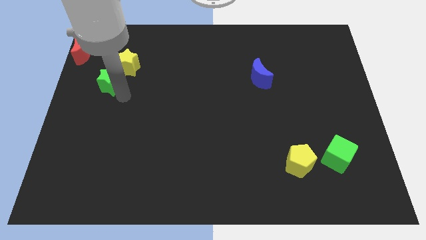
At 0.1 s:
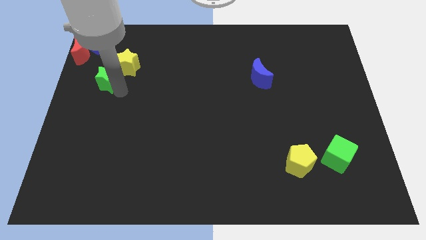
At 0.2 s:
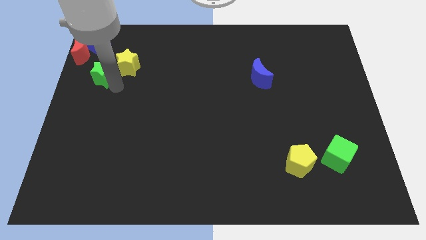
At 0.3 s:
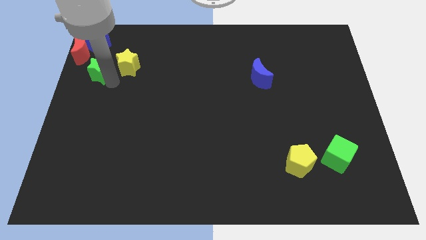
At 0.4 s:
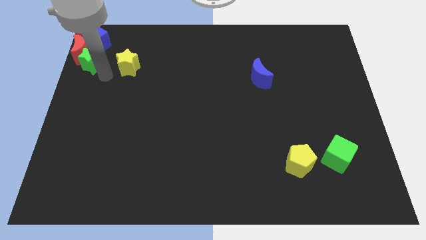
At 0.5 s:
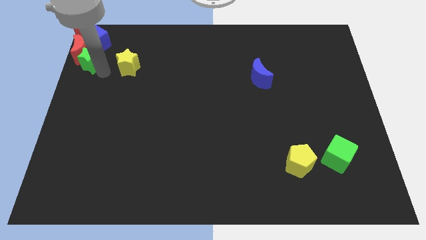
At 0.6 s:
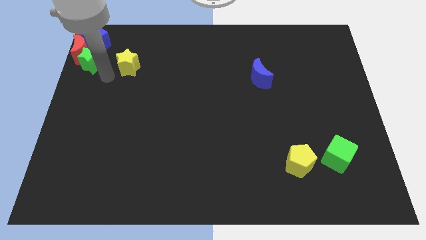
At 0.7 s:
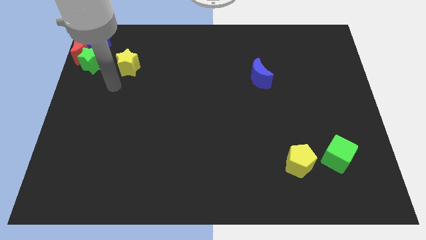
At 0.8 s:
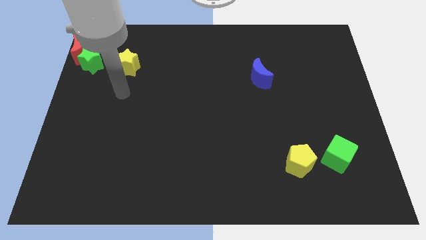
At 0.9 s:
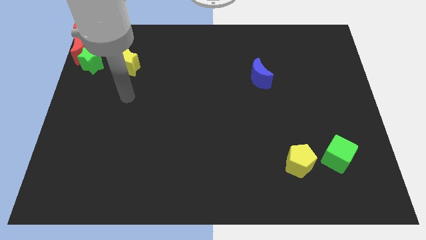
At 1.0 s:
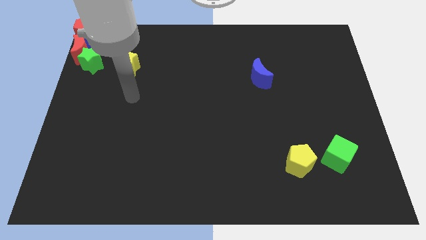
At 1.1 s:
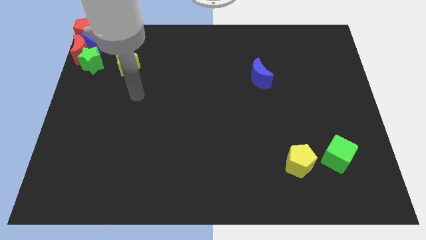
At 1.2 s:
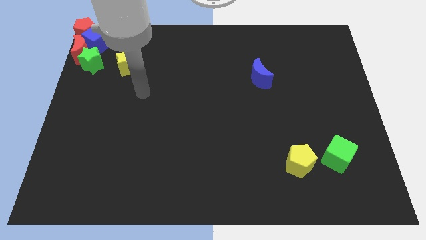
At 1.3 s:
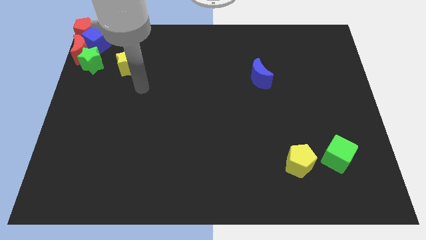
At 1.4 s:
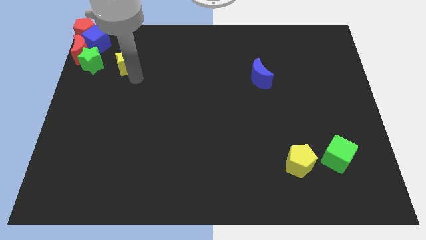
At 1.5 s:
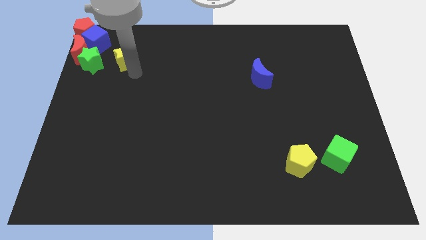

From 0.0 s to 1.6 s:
place green star left to yellow star

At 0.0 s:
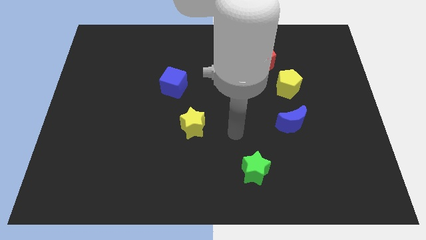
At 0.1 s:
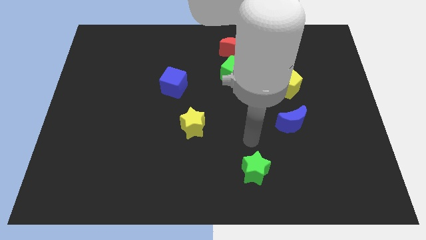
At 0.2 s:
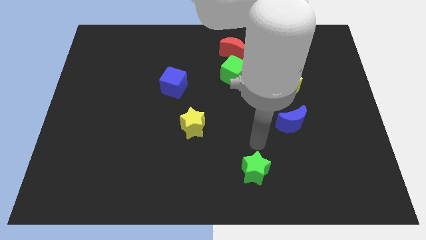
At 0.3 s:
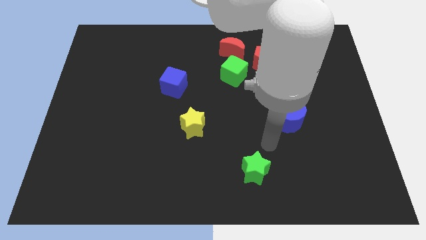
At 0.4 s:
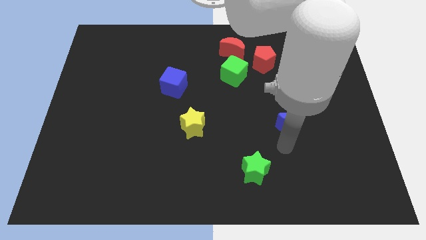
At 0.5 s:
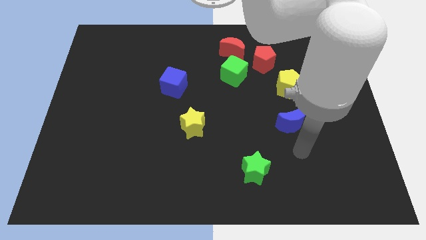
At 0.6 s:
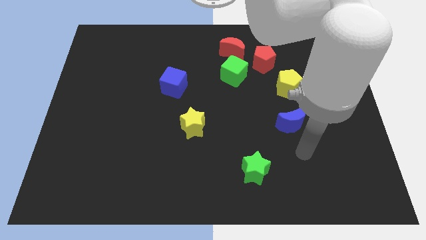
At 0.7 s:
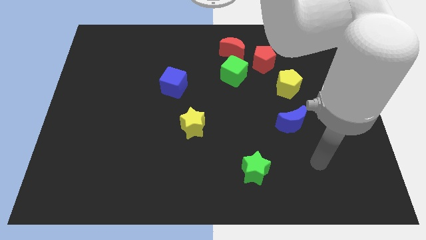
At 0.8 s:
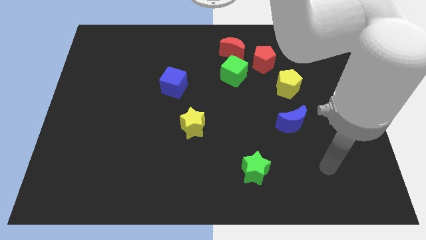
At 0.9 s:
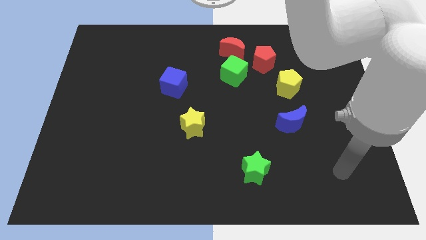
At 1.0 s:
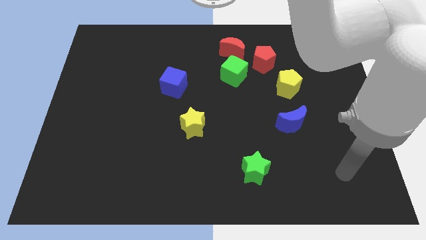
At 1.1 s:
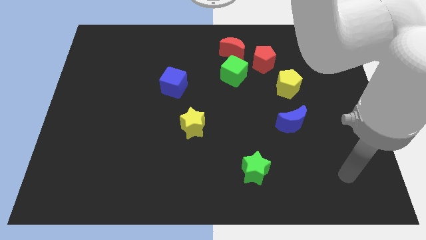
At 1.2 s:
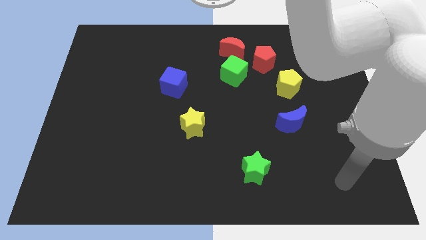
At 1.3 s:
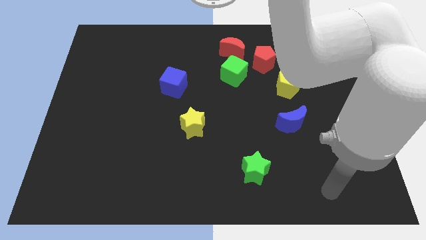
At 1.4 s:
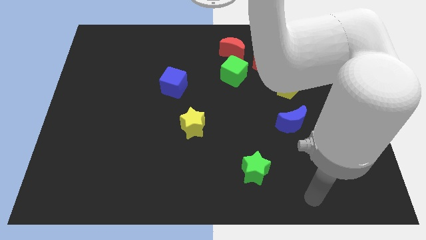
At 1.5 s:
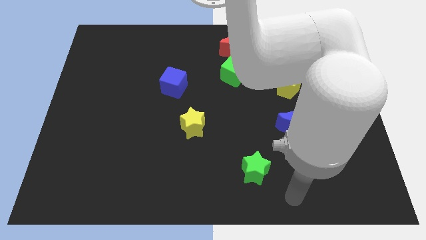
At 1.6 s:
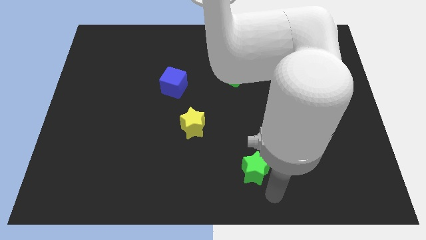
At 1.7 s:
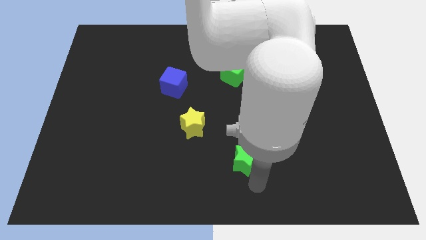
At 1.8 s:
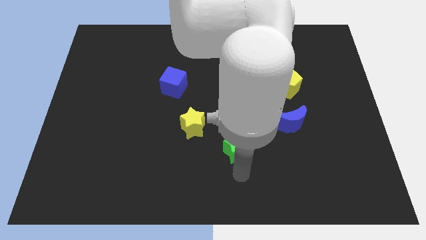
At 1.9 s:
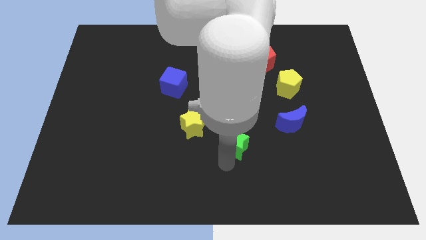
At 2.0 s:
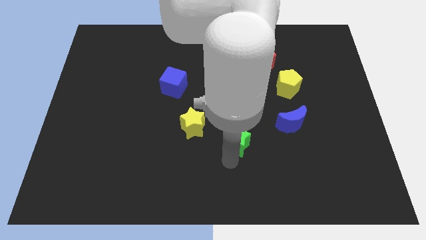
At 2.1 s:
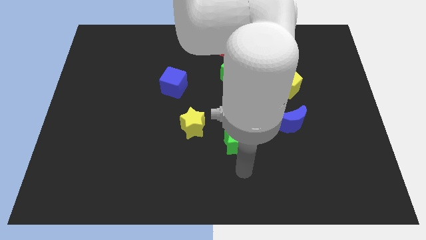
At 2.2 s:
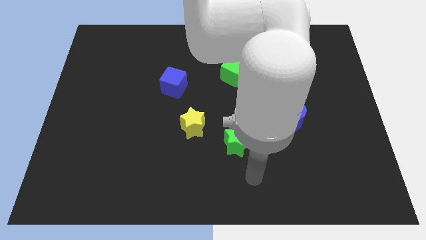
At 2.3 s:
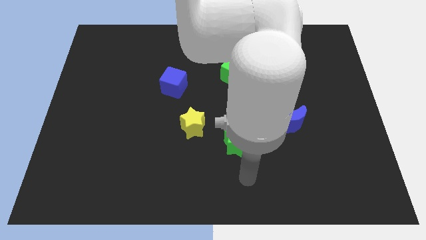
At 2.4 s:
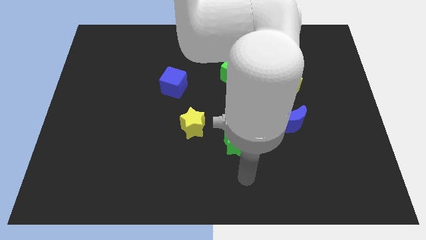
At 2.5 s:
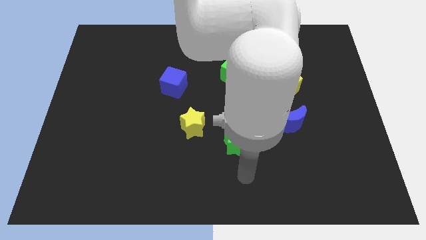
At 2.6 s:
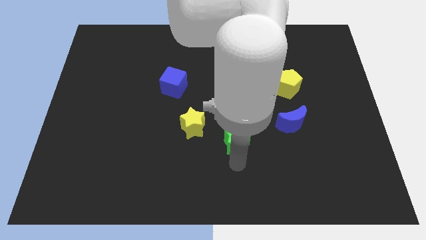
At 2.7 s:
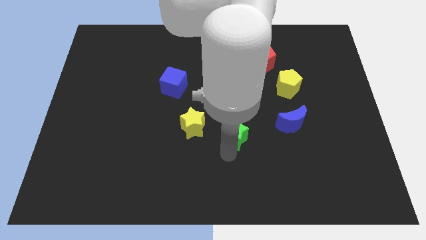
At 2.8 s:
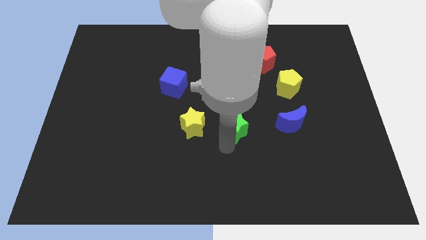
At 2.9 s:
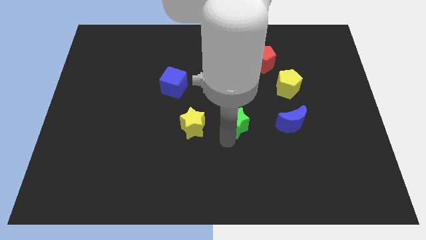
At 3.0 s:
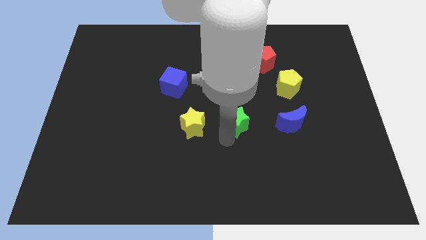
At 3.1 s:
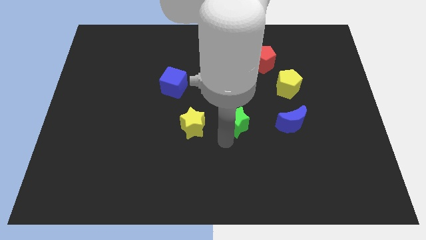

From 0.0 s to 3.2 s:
place the green star in between the yellow star and the blue moon

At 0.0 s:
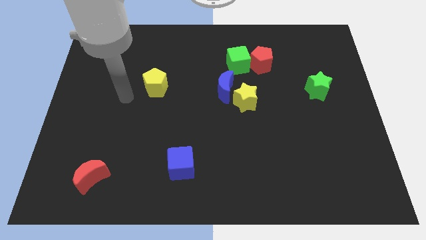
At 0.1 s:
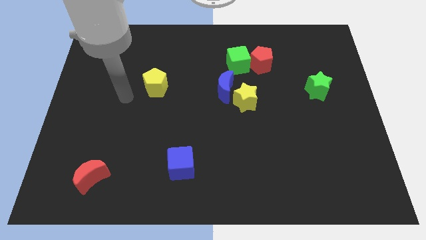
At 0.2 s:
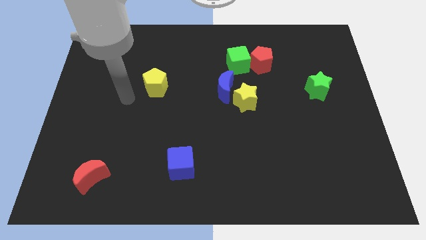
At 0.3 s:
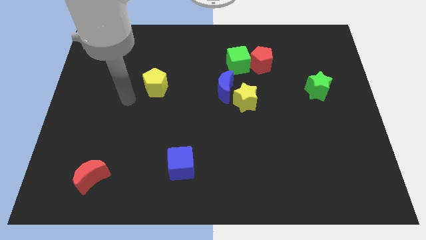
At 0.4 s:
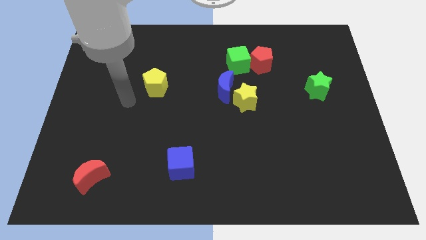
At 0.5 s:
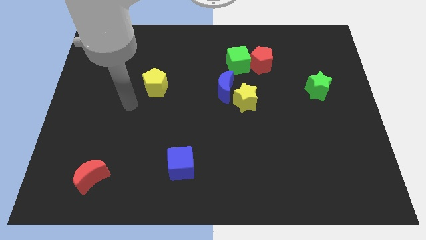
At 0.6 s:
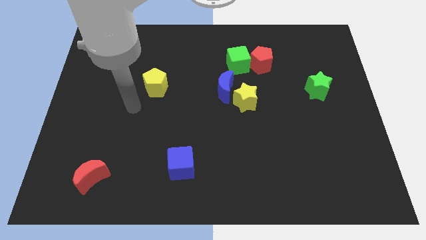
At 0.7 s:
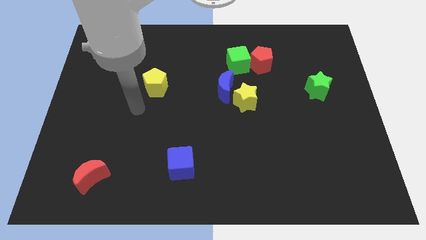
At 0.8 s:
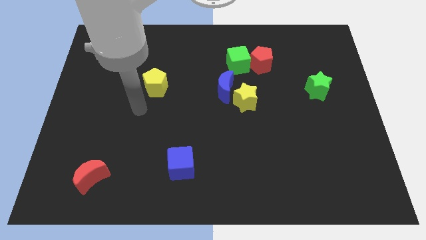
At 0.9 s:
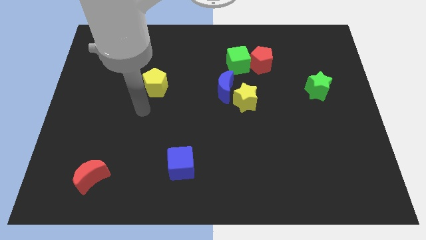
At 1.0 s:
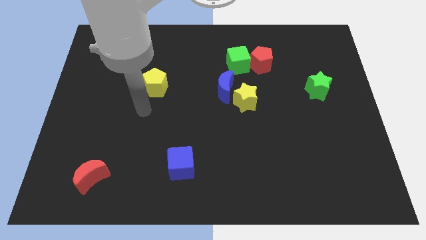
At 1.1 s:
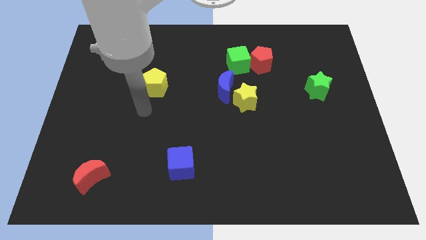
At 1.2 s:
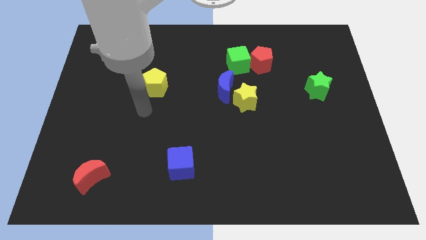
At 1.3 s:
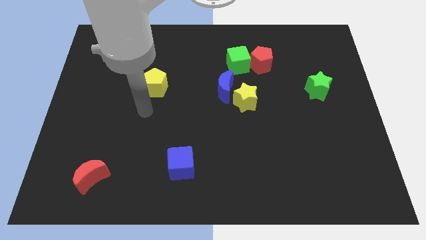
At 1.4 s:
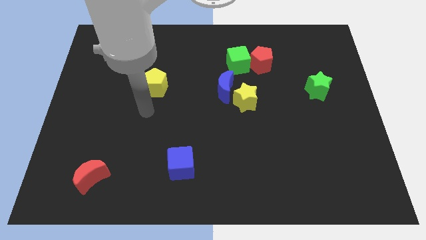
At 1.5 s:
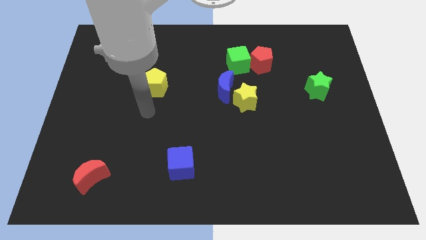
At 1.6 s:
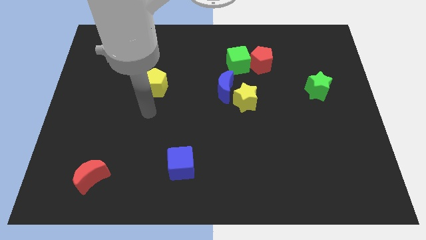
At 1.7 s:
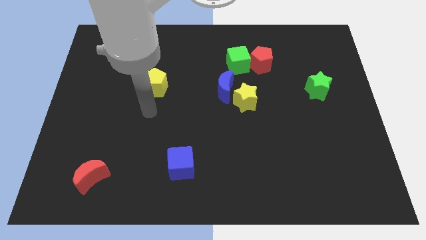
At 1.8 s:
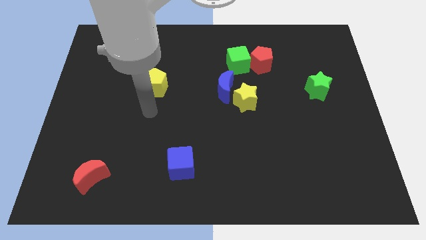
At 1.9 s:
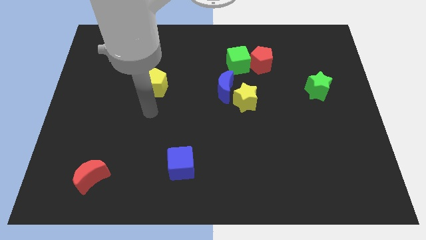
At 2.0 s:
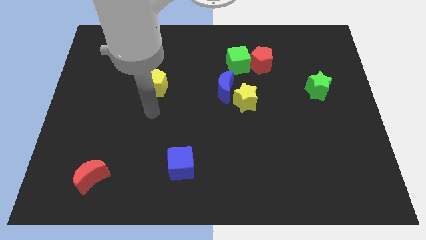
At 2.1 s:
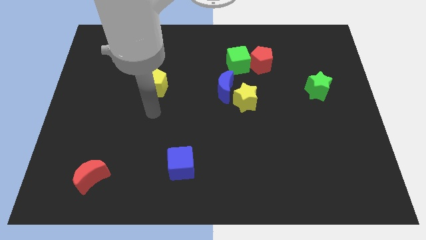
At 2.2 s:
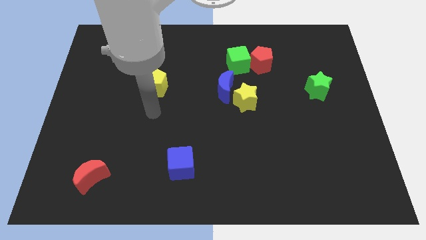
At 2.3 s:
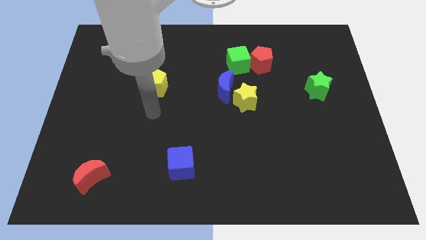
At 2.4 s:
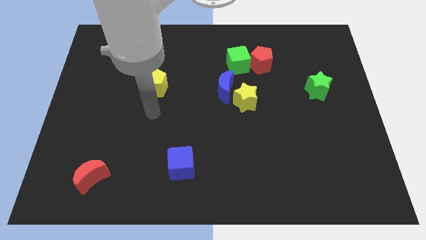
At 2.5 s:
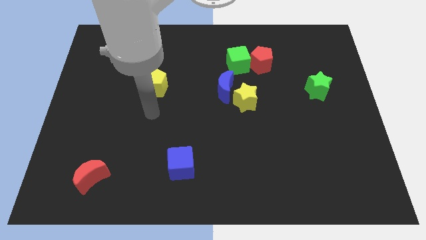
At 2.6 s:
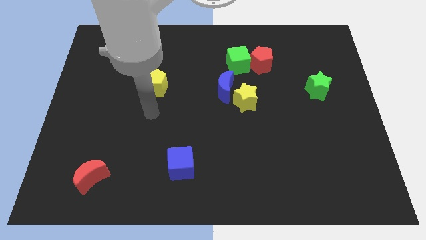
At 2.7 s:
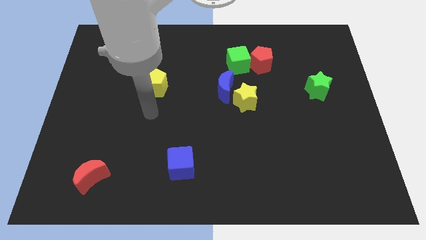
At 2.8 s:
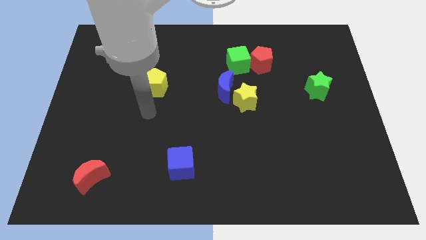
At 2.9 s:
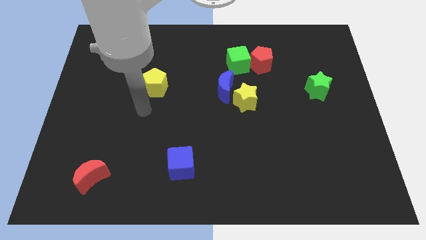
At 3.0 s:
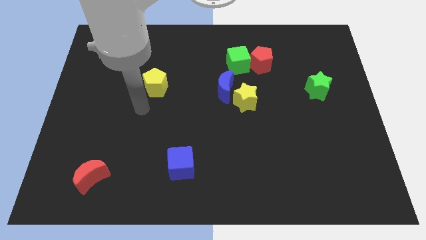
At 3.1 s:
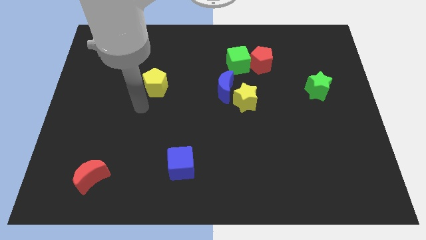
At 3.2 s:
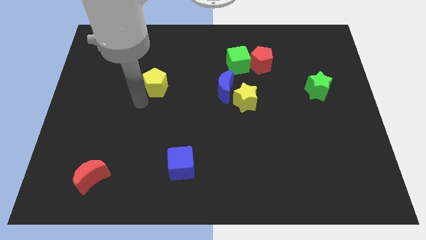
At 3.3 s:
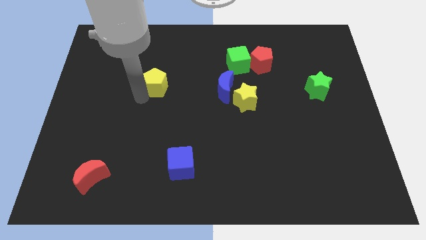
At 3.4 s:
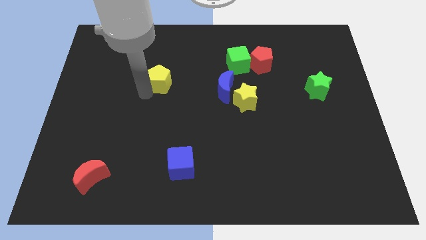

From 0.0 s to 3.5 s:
place the yellow pentagon parallel left to the blue moon

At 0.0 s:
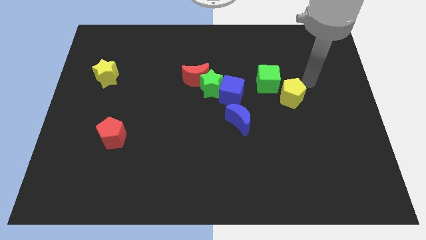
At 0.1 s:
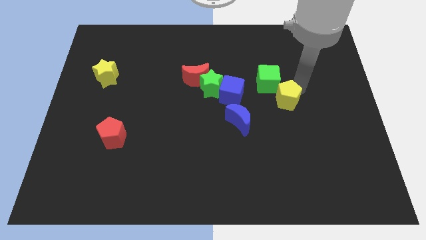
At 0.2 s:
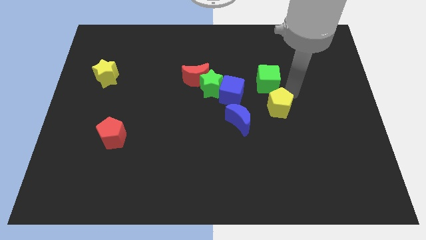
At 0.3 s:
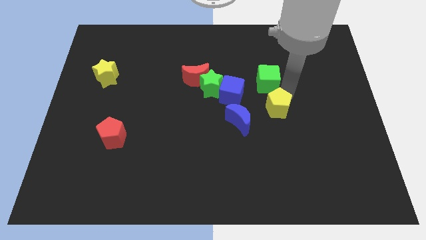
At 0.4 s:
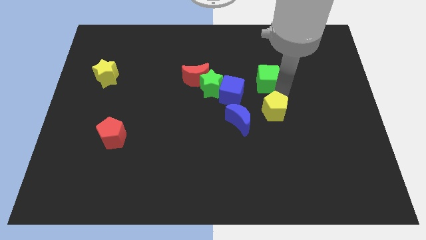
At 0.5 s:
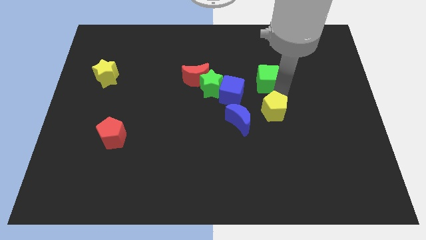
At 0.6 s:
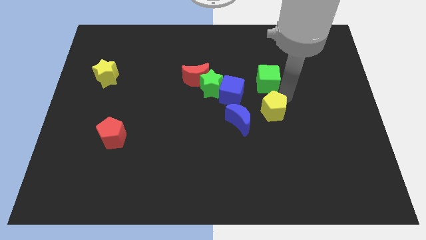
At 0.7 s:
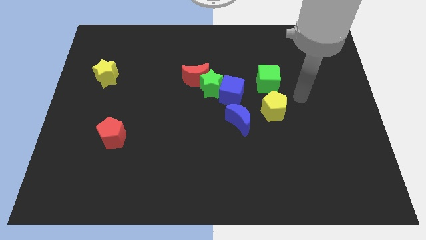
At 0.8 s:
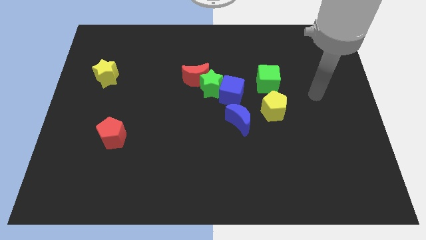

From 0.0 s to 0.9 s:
move yellow pentagon below green cube
